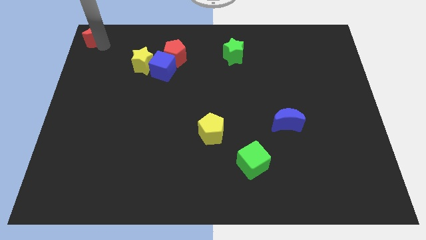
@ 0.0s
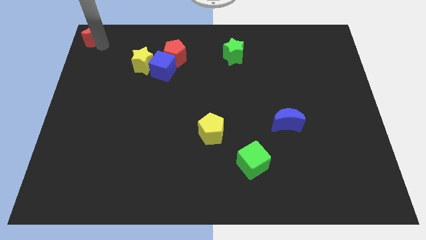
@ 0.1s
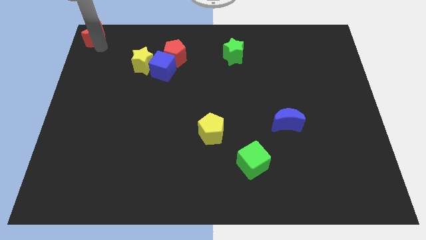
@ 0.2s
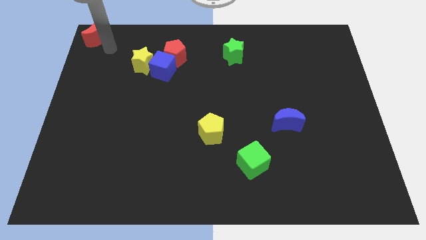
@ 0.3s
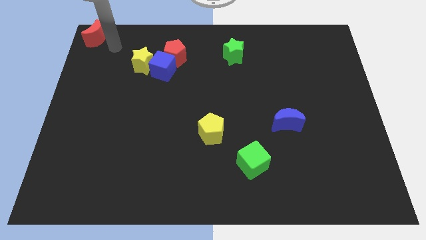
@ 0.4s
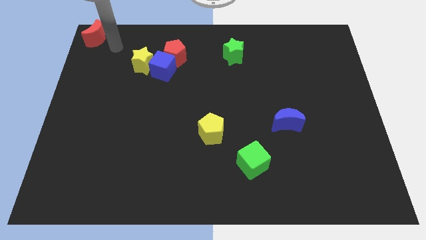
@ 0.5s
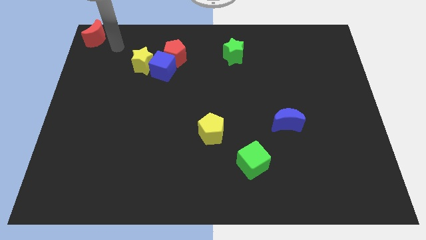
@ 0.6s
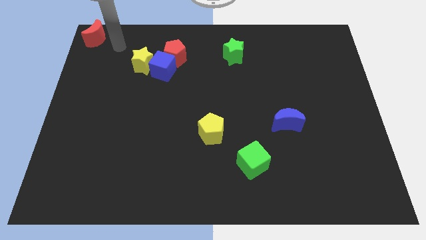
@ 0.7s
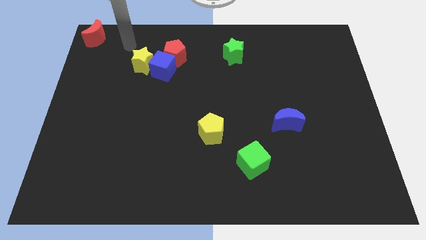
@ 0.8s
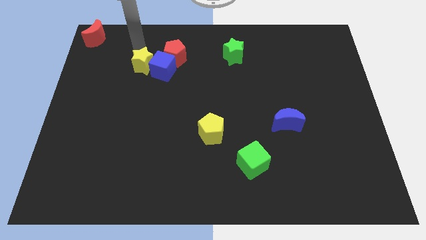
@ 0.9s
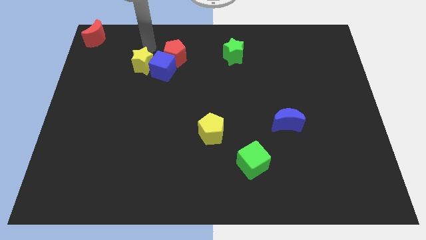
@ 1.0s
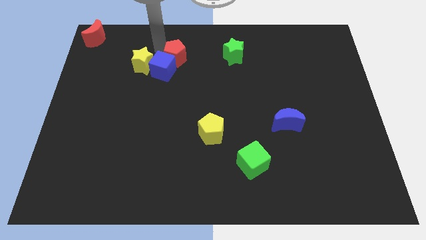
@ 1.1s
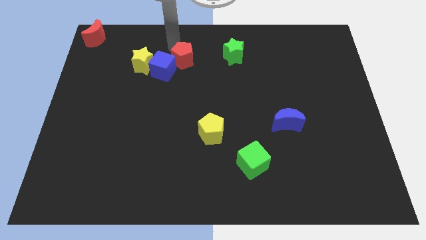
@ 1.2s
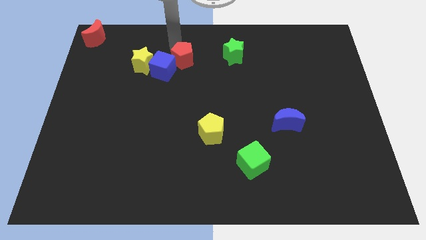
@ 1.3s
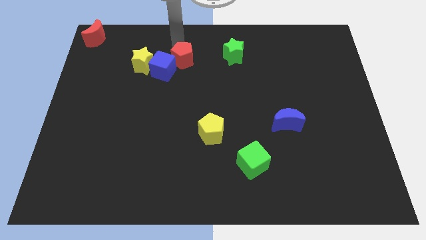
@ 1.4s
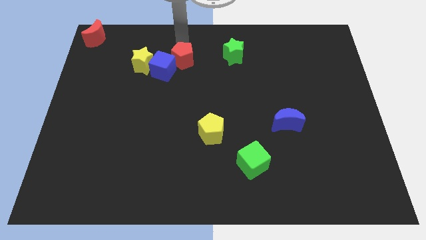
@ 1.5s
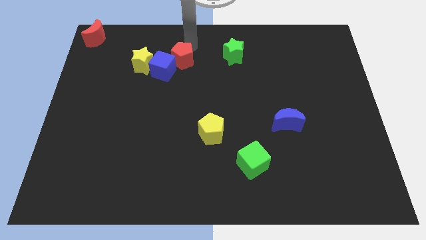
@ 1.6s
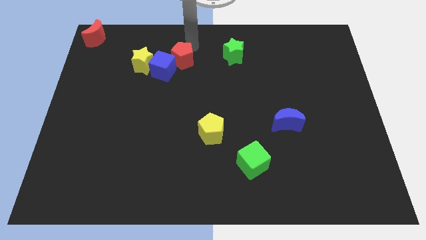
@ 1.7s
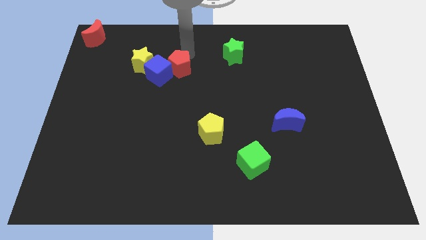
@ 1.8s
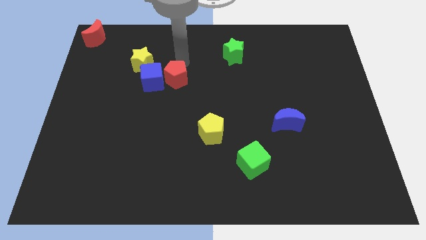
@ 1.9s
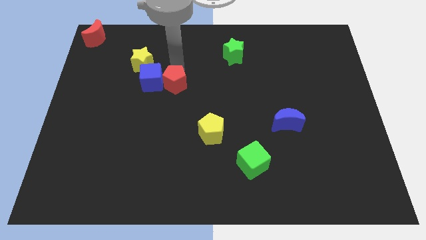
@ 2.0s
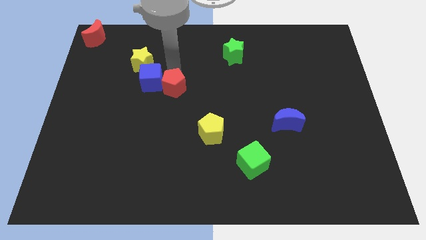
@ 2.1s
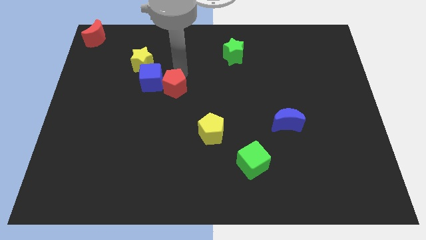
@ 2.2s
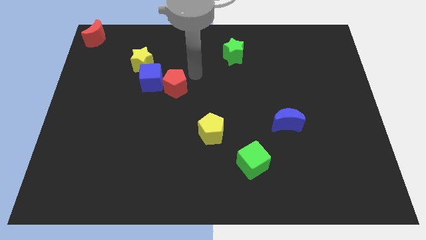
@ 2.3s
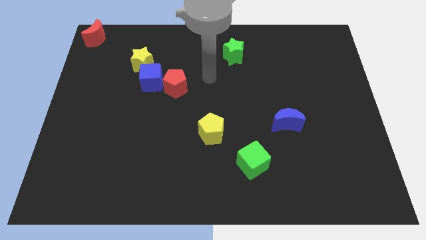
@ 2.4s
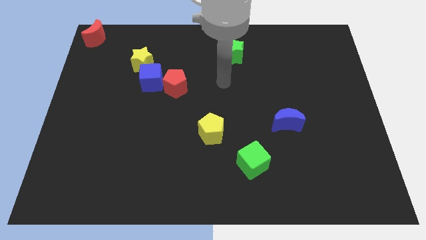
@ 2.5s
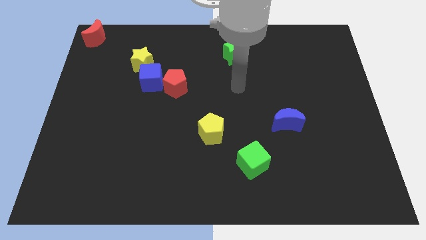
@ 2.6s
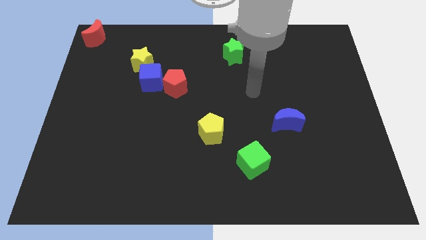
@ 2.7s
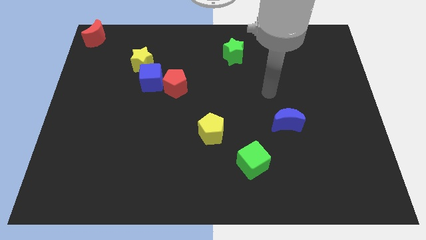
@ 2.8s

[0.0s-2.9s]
push red pentagon slightly towards down

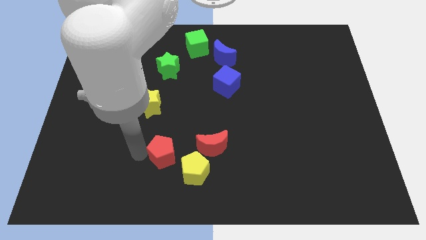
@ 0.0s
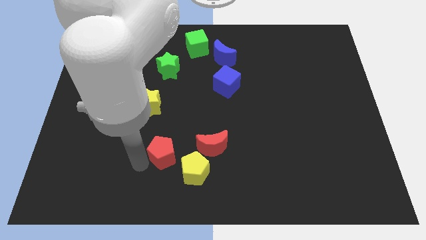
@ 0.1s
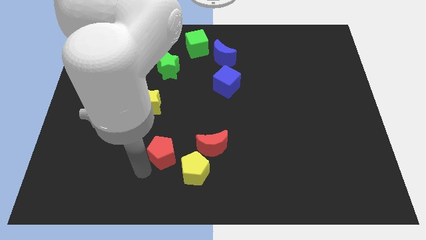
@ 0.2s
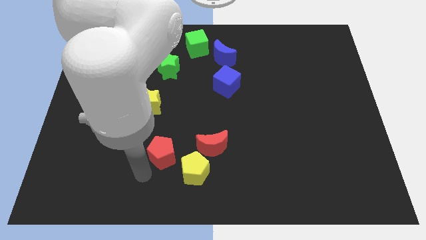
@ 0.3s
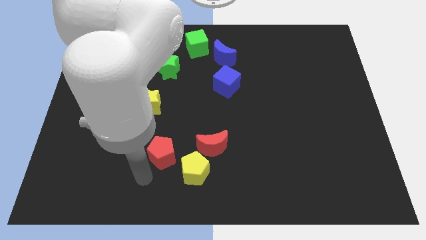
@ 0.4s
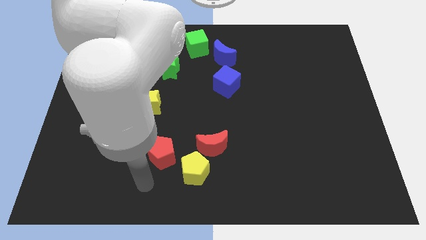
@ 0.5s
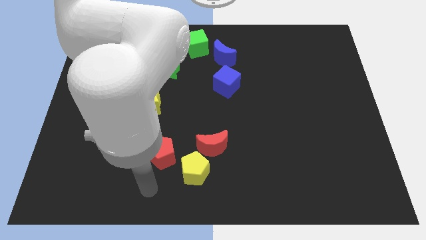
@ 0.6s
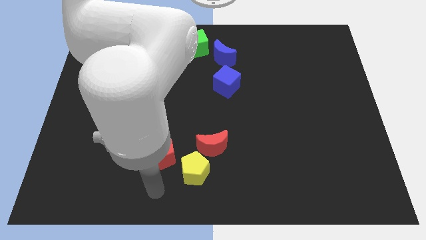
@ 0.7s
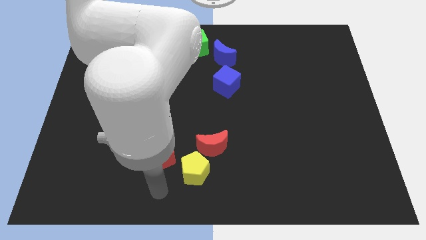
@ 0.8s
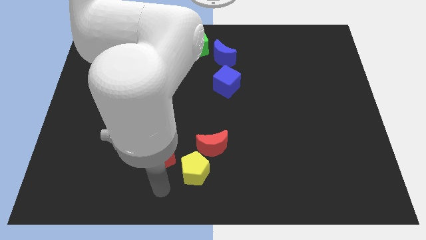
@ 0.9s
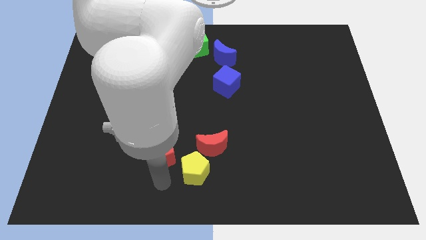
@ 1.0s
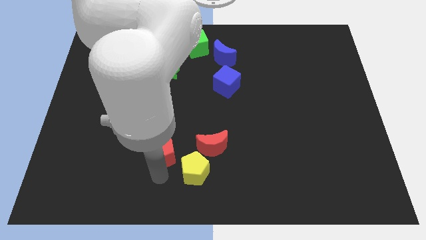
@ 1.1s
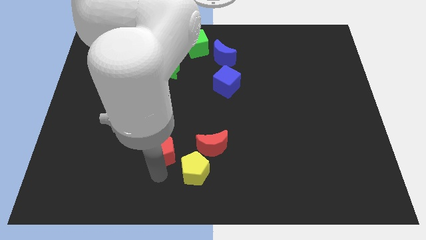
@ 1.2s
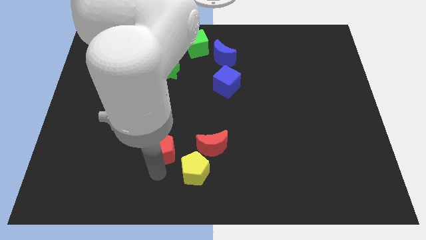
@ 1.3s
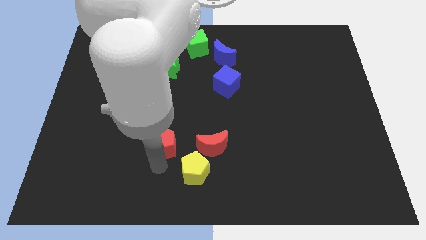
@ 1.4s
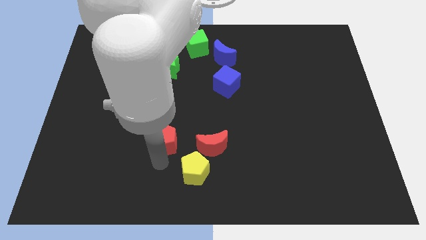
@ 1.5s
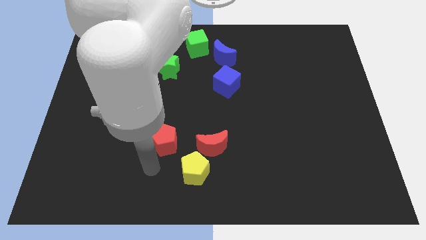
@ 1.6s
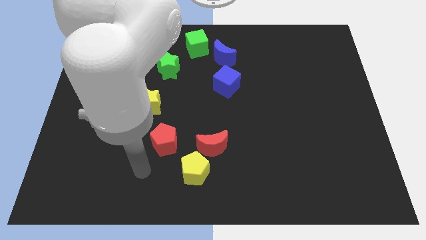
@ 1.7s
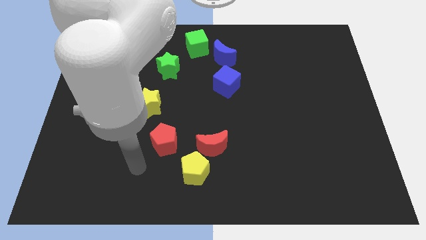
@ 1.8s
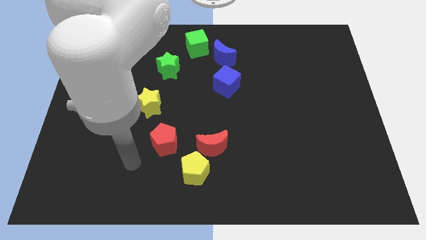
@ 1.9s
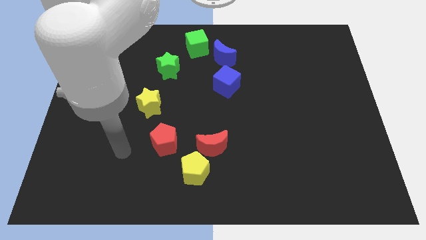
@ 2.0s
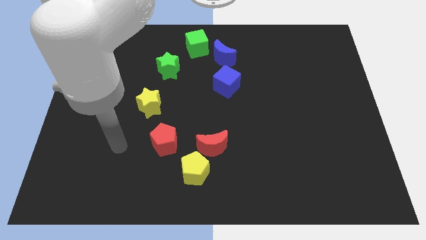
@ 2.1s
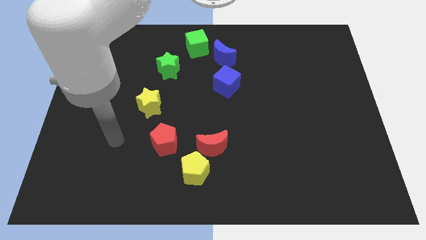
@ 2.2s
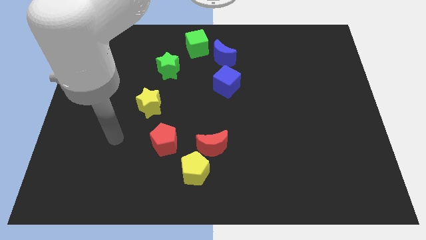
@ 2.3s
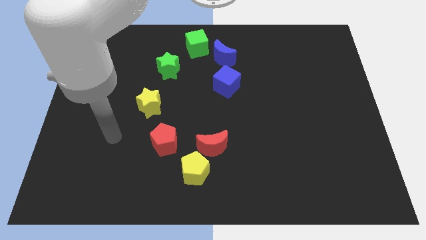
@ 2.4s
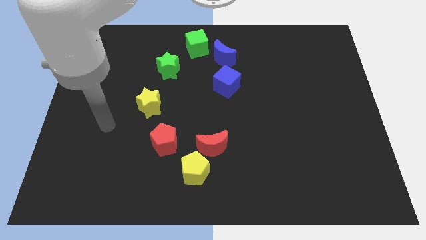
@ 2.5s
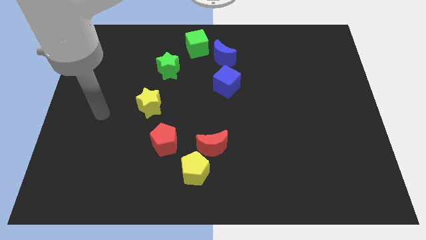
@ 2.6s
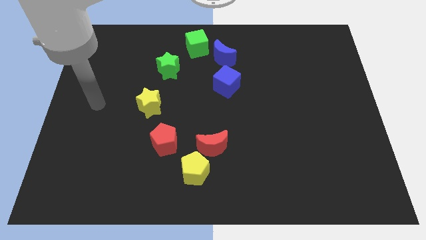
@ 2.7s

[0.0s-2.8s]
adjust the red pentagon diagonally to the top left of the yellow pentagon

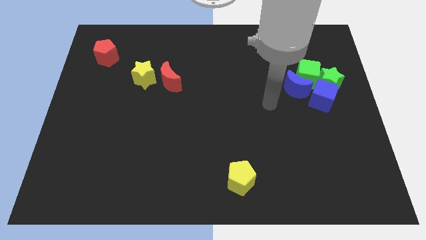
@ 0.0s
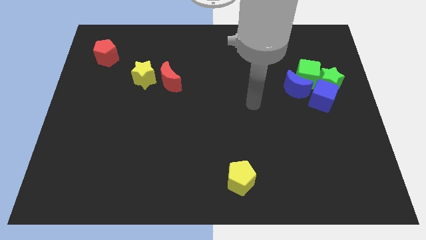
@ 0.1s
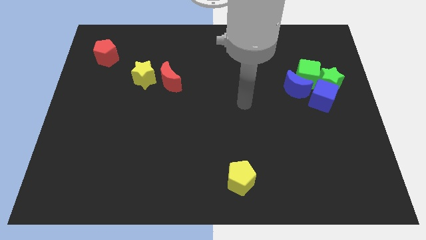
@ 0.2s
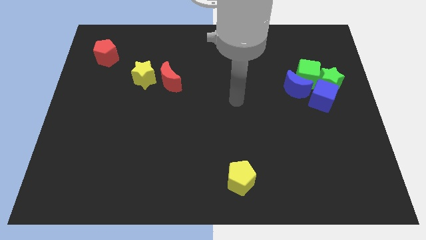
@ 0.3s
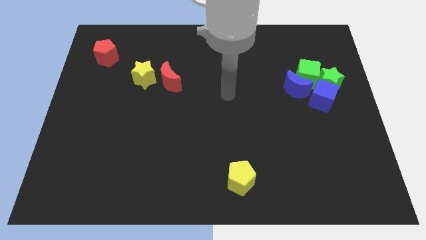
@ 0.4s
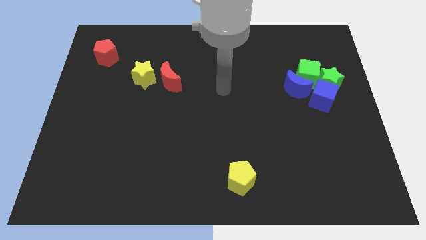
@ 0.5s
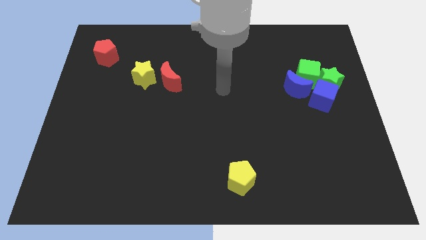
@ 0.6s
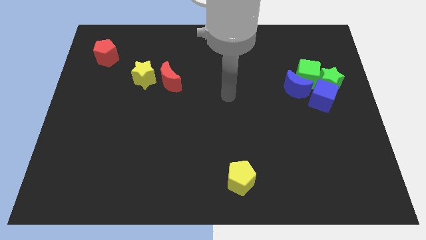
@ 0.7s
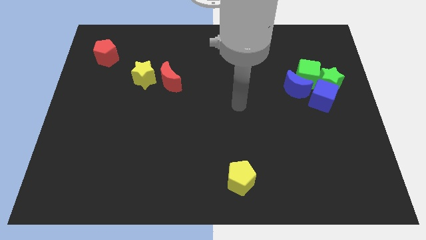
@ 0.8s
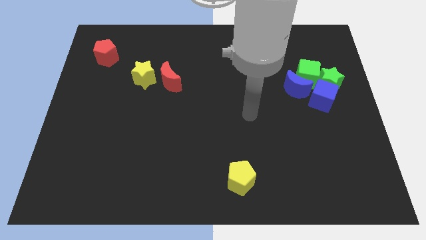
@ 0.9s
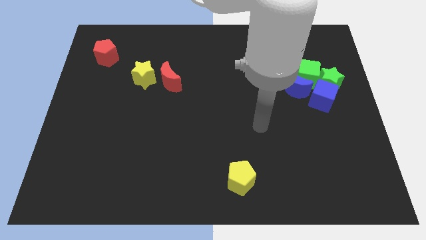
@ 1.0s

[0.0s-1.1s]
move the arm away from the blue crescent

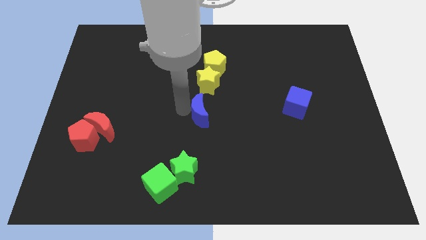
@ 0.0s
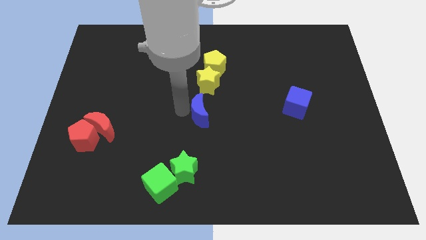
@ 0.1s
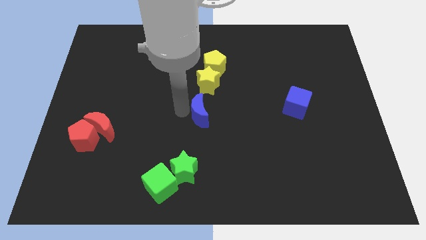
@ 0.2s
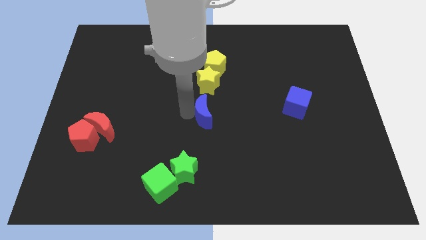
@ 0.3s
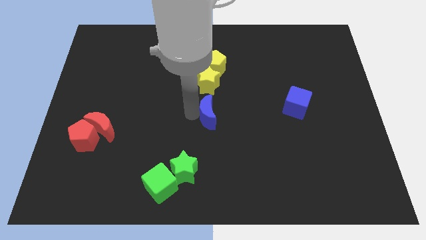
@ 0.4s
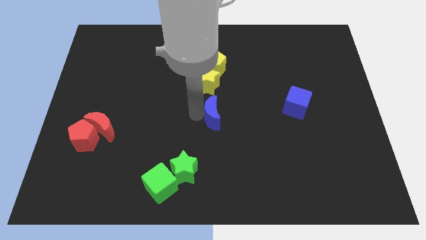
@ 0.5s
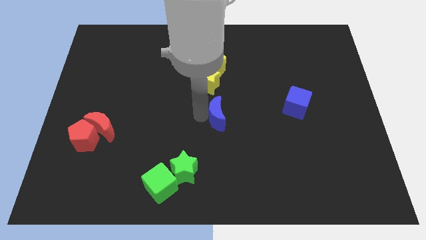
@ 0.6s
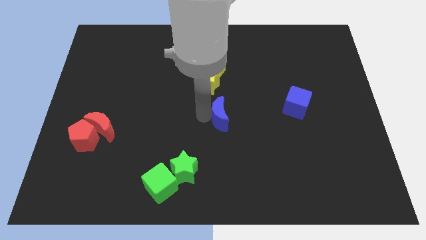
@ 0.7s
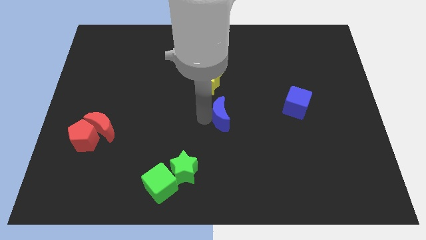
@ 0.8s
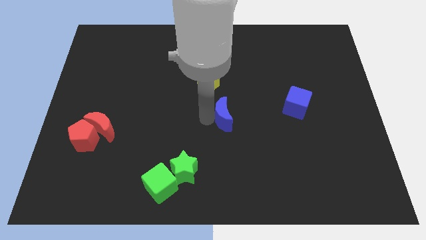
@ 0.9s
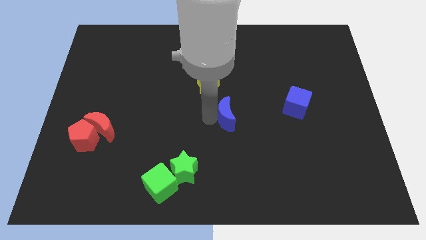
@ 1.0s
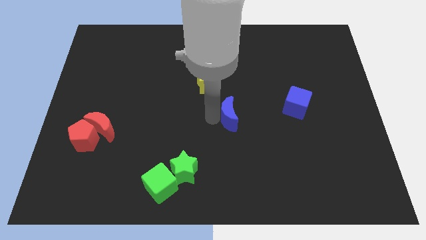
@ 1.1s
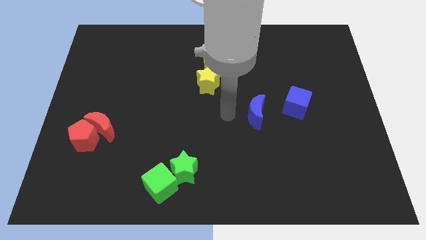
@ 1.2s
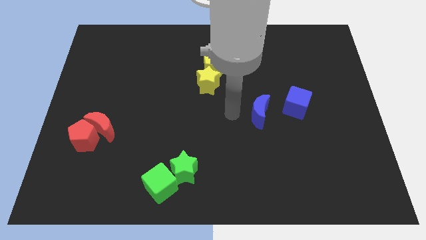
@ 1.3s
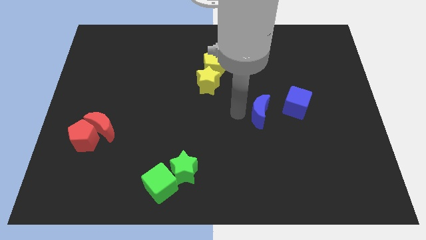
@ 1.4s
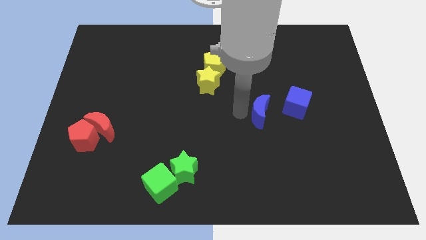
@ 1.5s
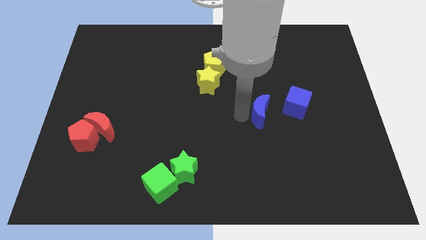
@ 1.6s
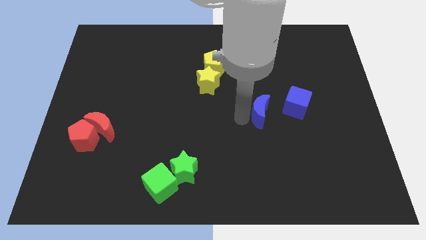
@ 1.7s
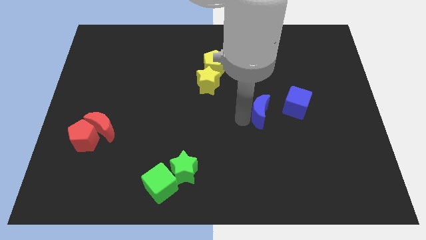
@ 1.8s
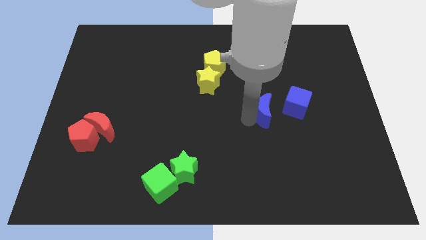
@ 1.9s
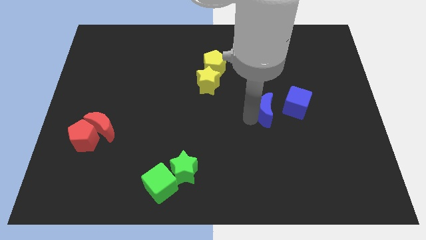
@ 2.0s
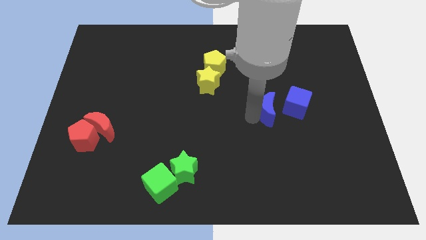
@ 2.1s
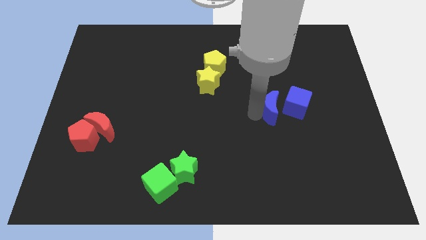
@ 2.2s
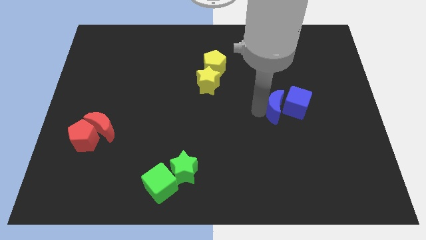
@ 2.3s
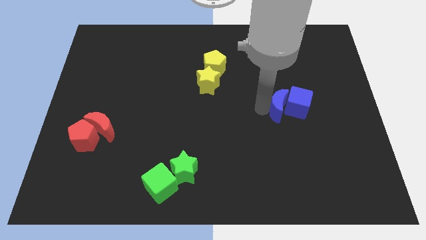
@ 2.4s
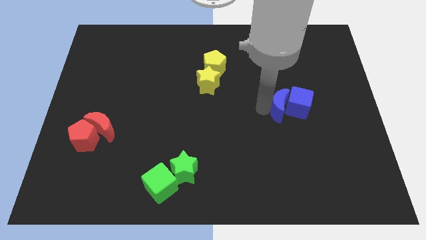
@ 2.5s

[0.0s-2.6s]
move the blue crescent to left side of the blue cube
